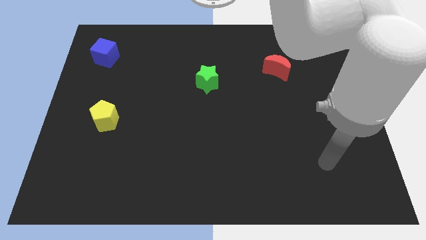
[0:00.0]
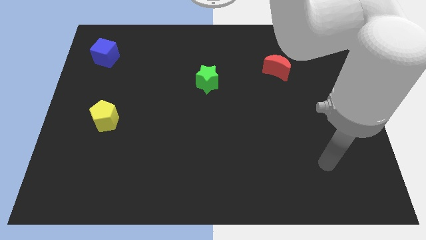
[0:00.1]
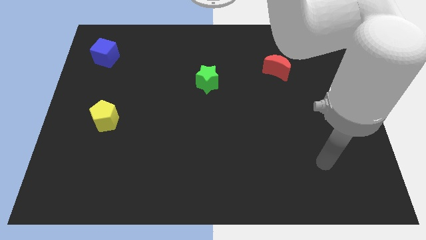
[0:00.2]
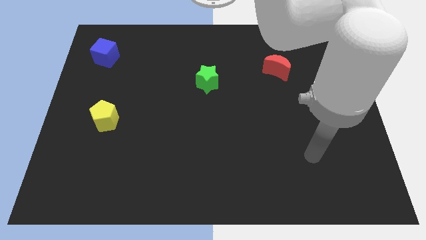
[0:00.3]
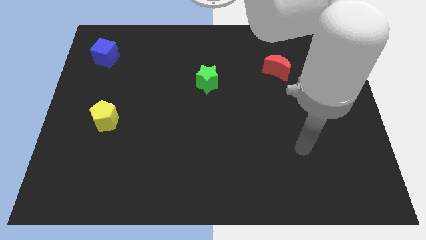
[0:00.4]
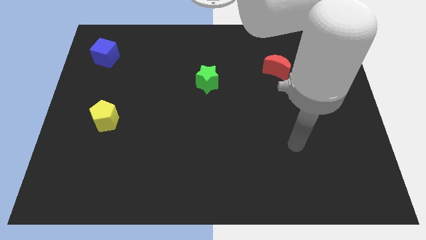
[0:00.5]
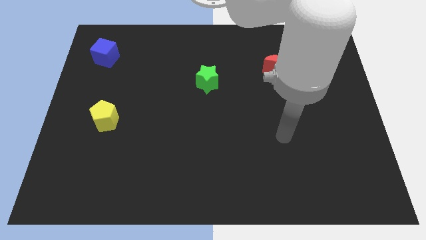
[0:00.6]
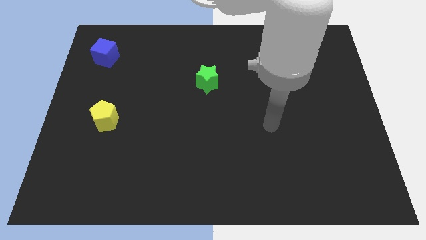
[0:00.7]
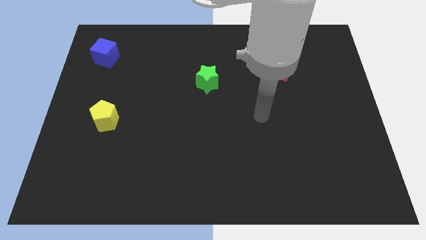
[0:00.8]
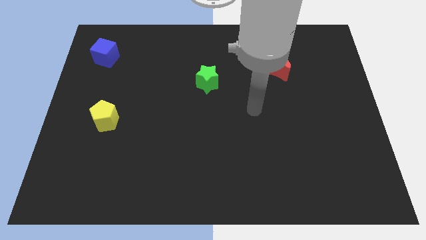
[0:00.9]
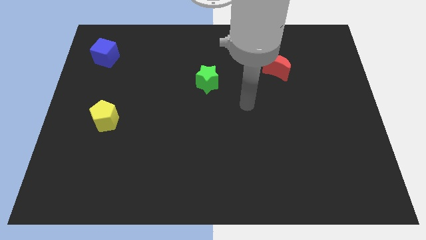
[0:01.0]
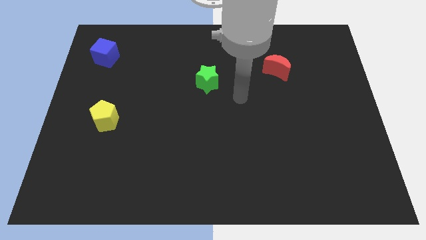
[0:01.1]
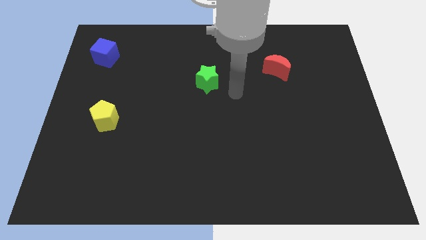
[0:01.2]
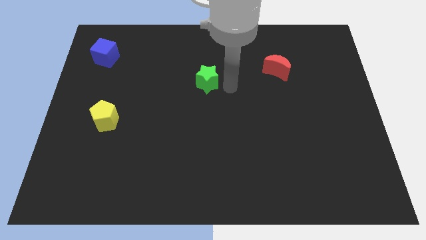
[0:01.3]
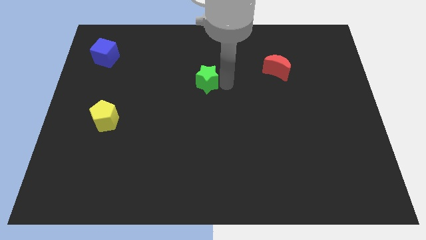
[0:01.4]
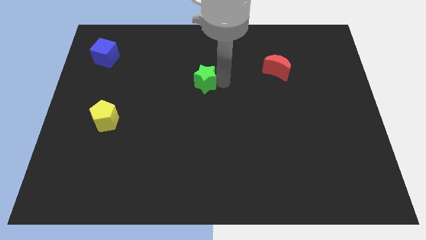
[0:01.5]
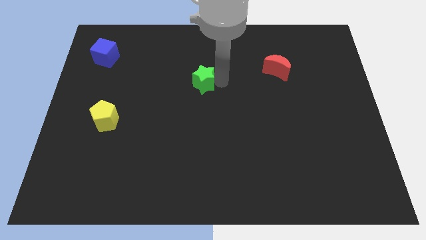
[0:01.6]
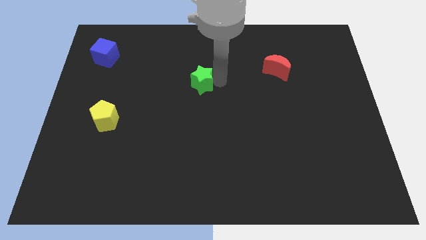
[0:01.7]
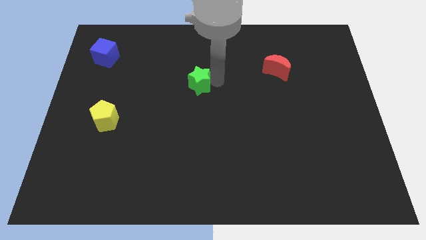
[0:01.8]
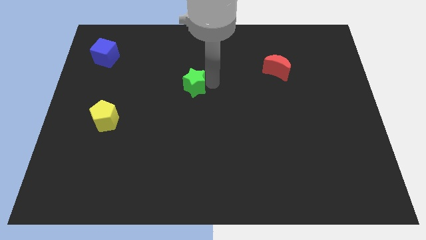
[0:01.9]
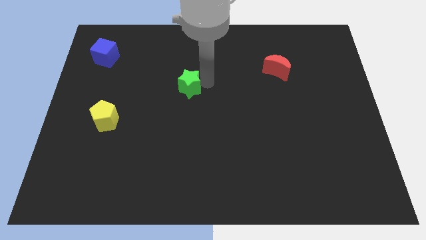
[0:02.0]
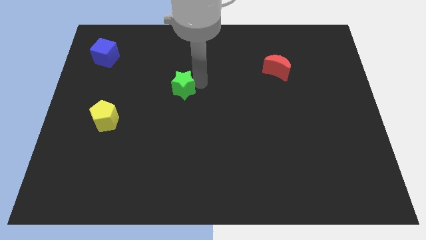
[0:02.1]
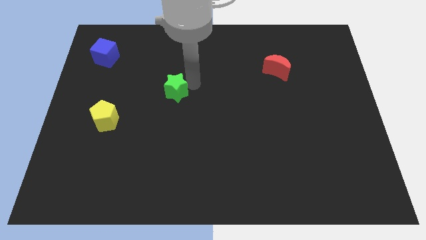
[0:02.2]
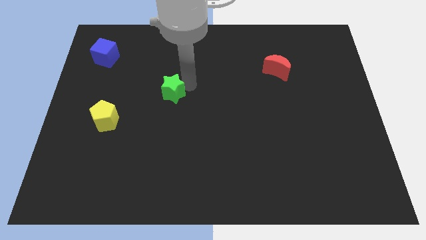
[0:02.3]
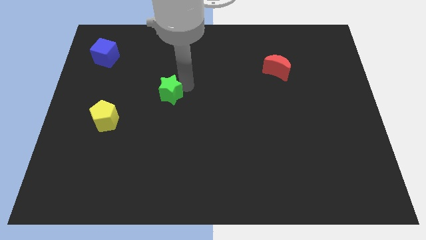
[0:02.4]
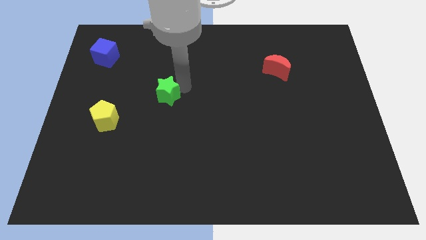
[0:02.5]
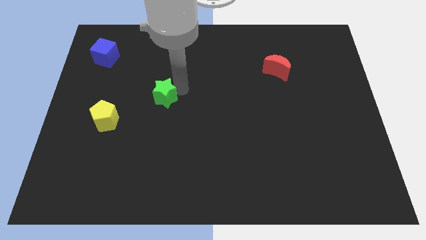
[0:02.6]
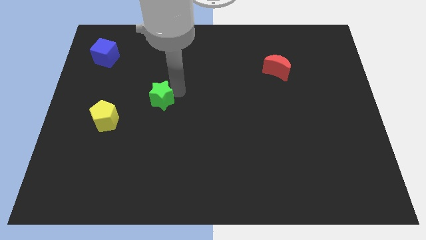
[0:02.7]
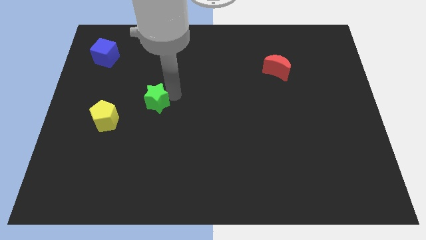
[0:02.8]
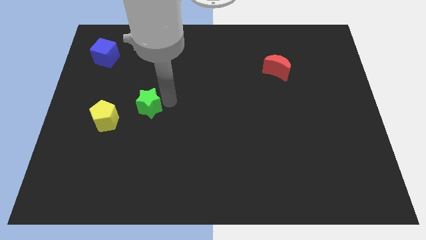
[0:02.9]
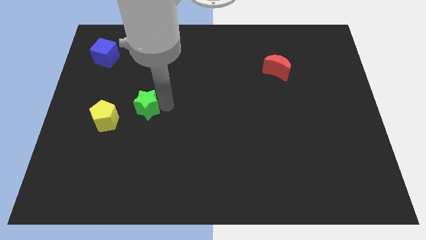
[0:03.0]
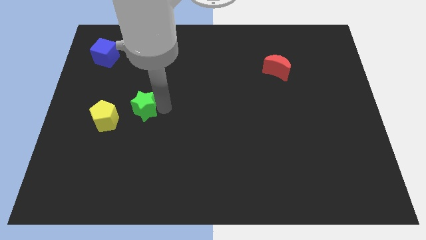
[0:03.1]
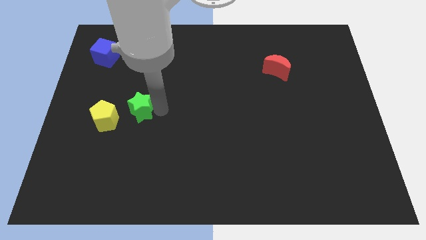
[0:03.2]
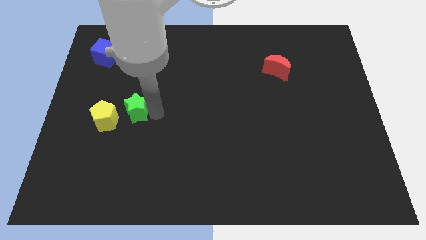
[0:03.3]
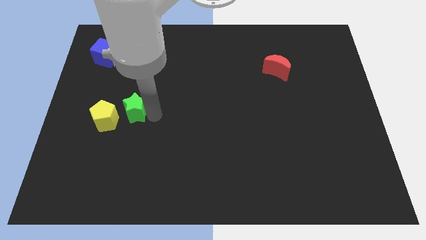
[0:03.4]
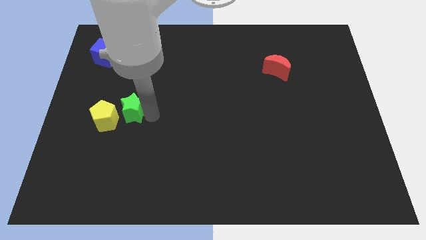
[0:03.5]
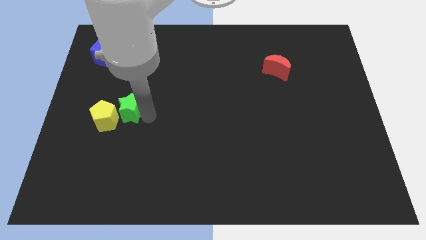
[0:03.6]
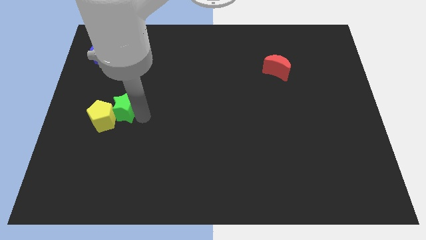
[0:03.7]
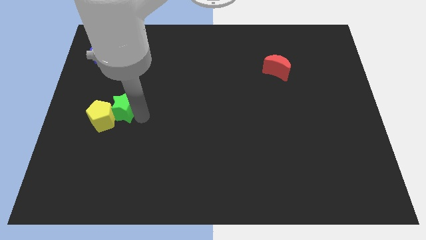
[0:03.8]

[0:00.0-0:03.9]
push the green star towards the yellow block

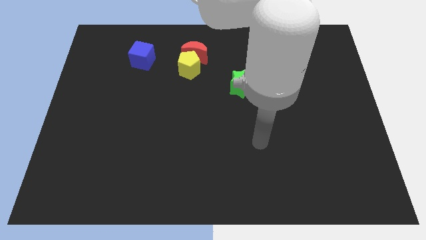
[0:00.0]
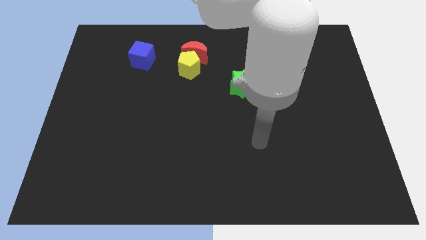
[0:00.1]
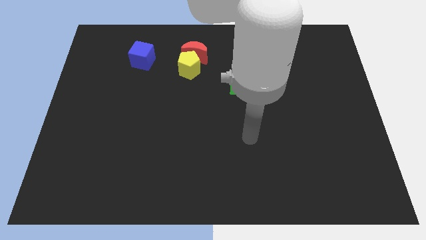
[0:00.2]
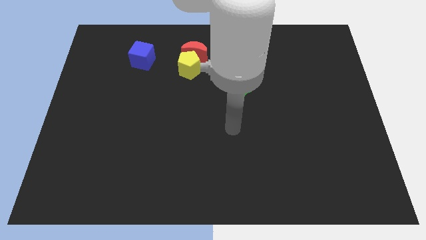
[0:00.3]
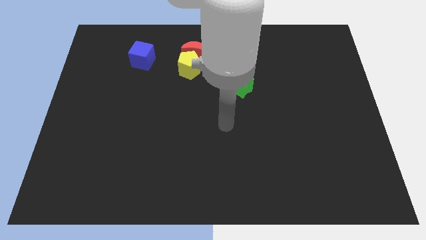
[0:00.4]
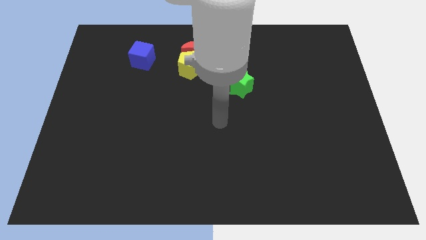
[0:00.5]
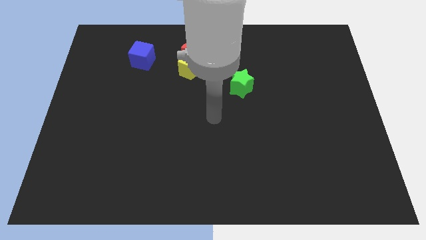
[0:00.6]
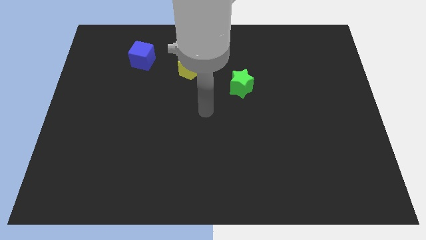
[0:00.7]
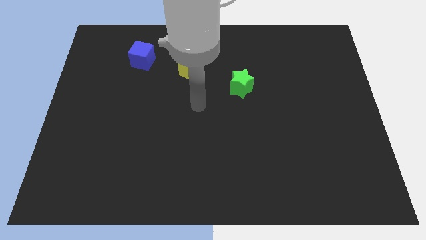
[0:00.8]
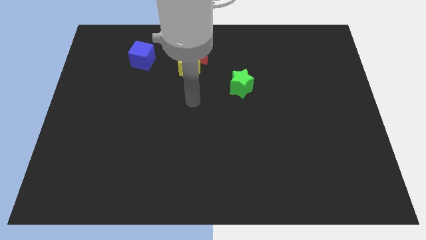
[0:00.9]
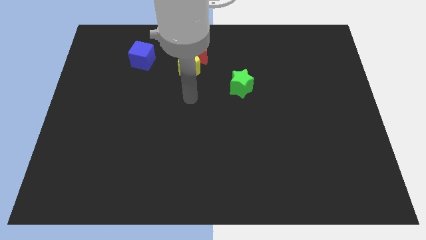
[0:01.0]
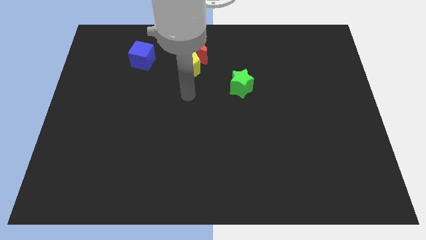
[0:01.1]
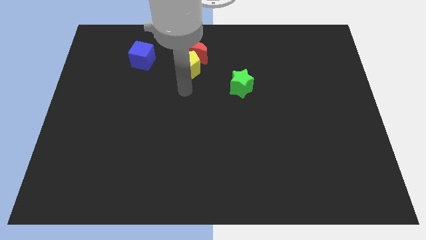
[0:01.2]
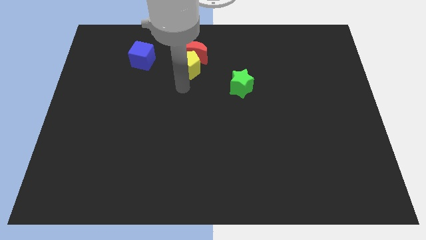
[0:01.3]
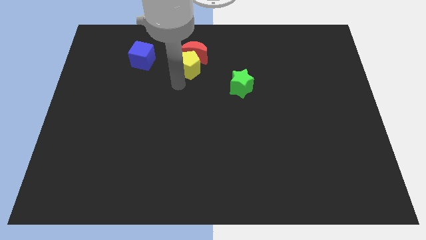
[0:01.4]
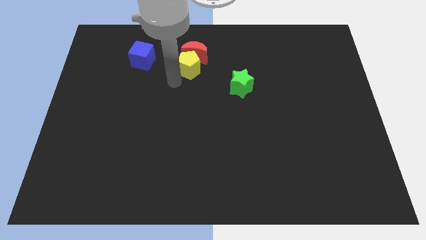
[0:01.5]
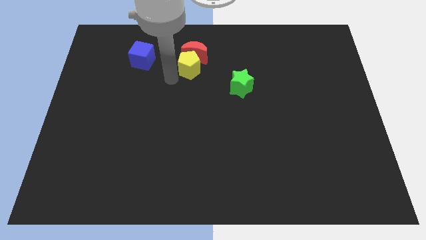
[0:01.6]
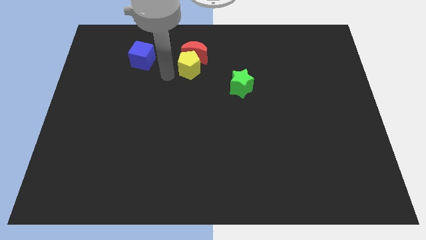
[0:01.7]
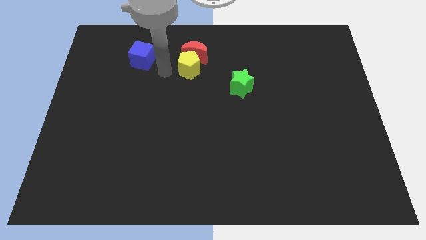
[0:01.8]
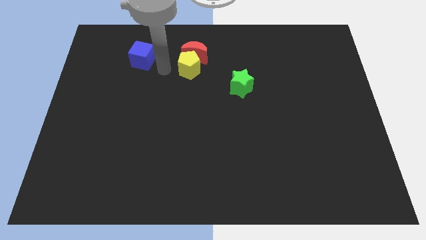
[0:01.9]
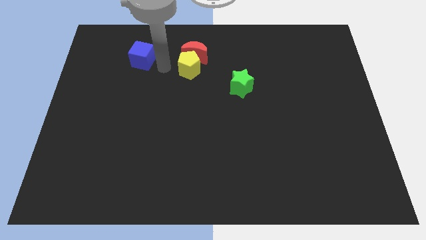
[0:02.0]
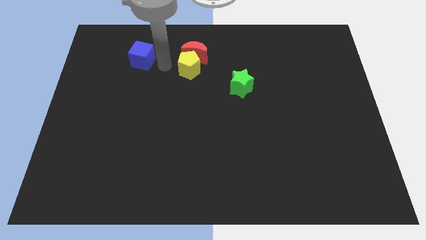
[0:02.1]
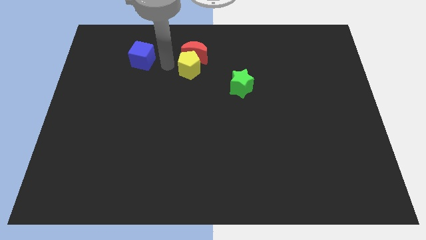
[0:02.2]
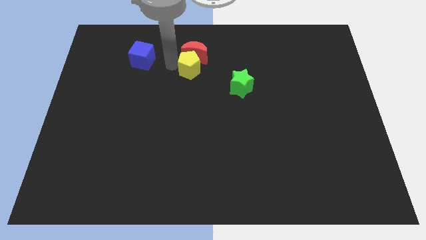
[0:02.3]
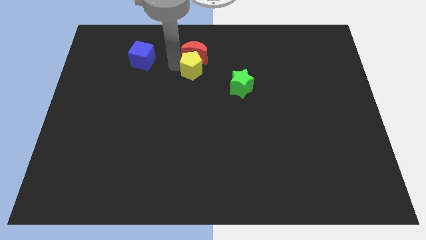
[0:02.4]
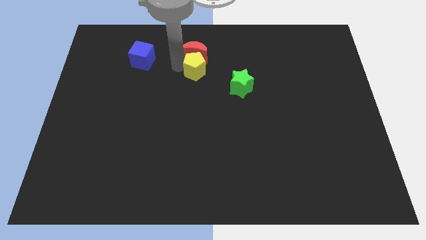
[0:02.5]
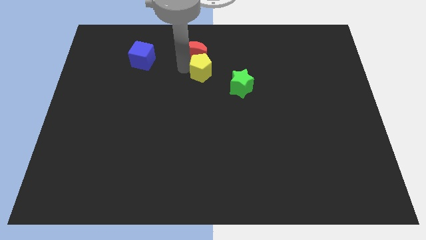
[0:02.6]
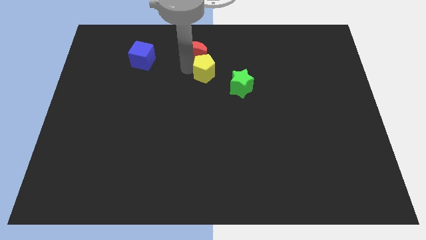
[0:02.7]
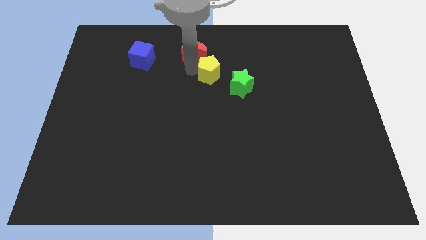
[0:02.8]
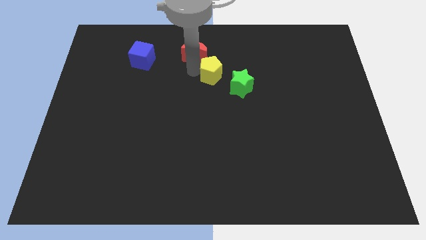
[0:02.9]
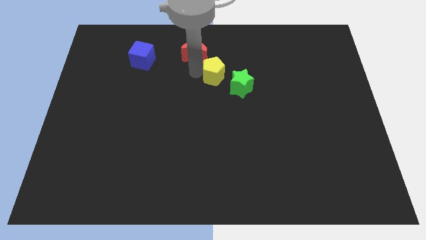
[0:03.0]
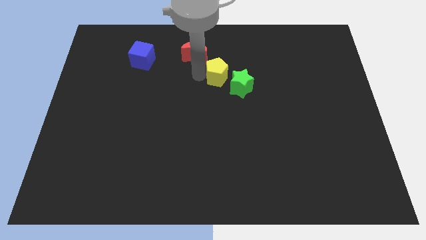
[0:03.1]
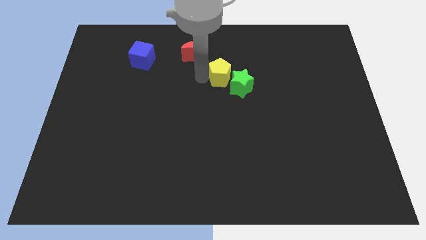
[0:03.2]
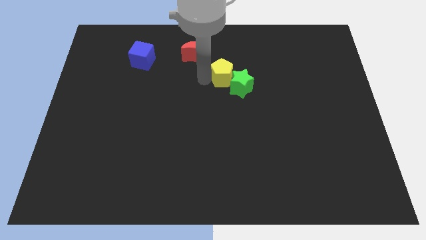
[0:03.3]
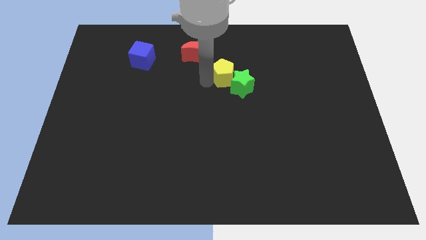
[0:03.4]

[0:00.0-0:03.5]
push the yellow pentagon next to the green star

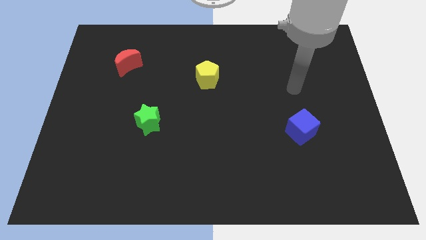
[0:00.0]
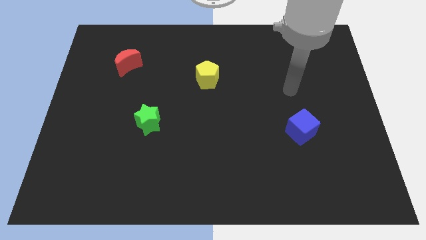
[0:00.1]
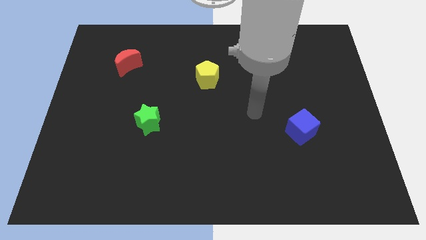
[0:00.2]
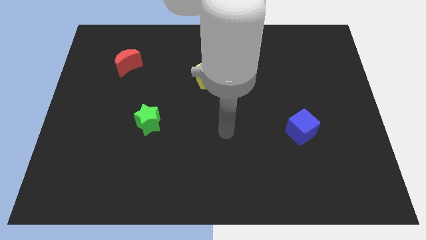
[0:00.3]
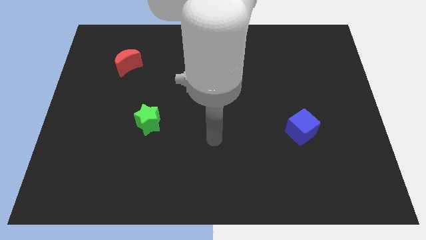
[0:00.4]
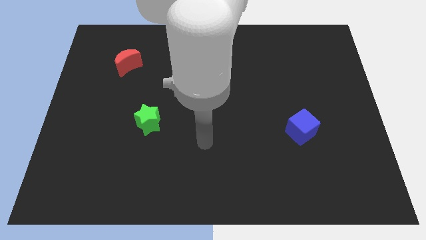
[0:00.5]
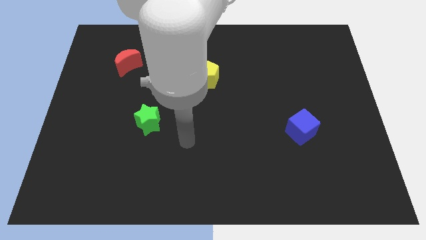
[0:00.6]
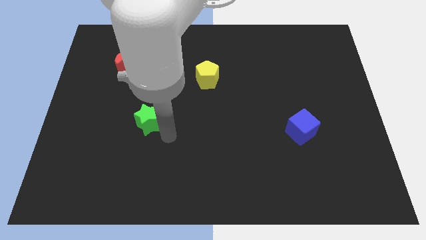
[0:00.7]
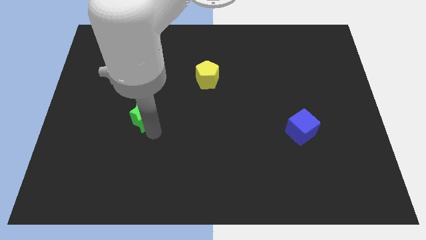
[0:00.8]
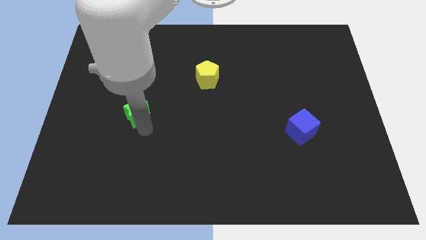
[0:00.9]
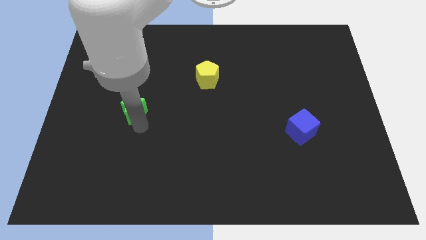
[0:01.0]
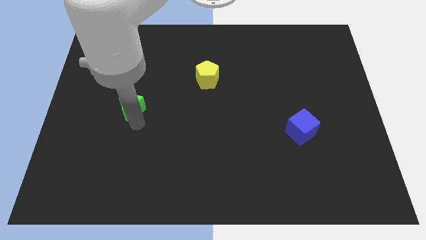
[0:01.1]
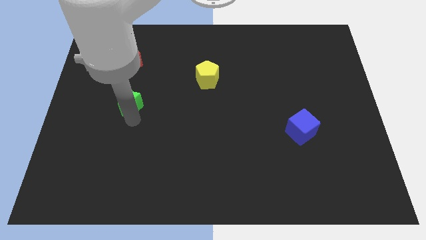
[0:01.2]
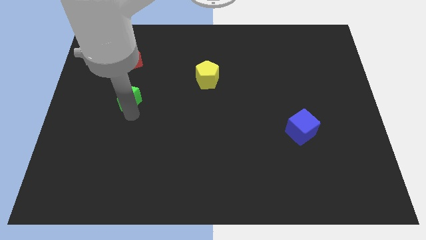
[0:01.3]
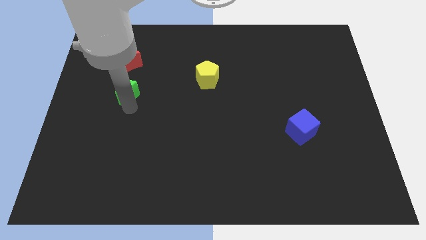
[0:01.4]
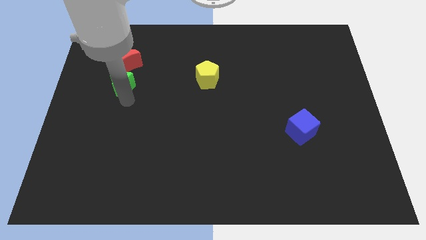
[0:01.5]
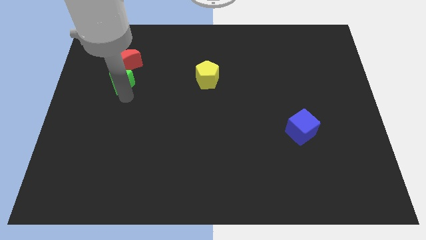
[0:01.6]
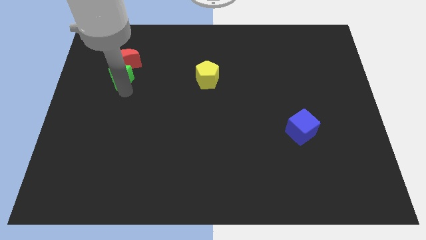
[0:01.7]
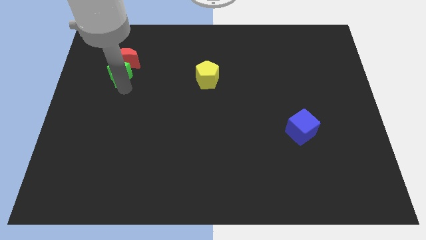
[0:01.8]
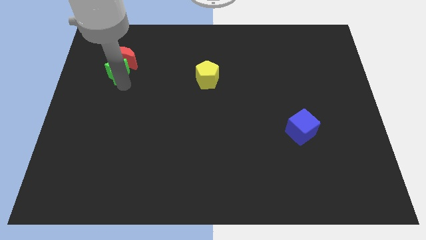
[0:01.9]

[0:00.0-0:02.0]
push the star to the moon
